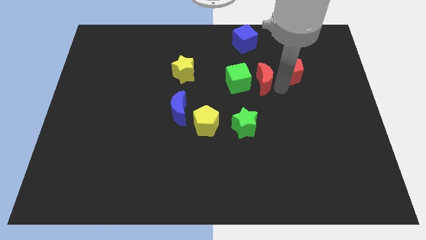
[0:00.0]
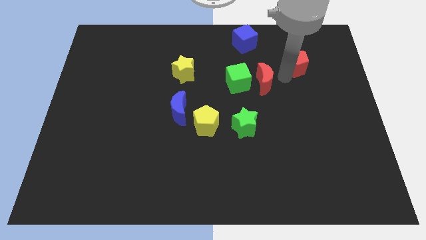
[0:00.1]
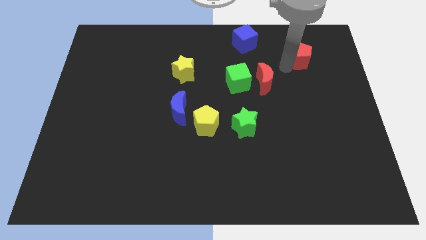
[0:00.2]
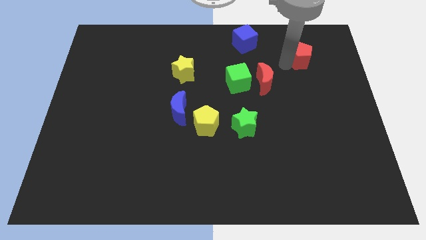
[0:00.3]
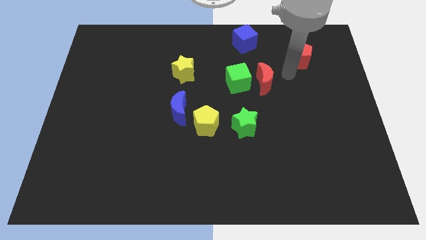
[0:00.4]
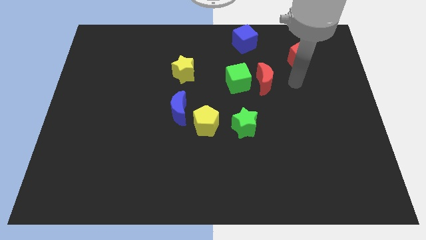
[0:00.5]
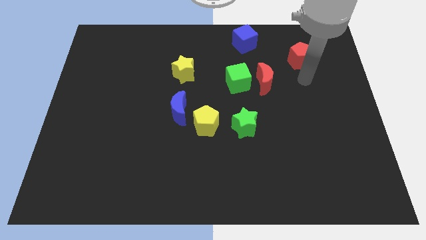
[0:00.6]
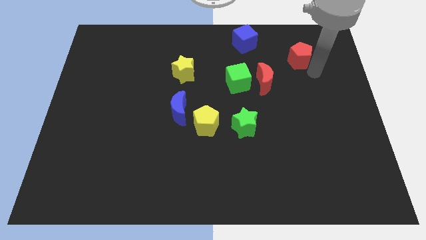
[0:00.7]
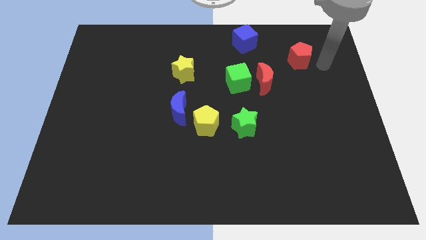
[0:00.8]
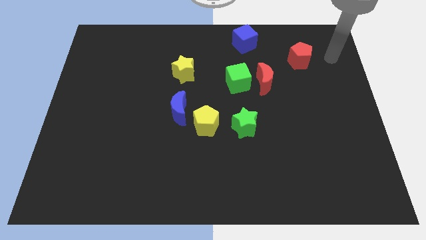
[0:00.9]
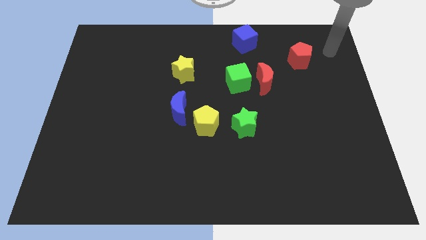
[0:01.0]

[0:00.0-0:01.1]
slide the red pentagon diagonally to the red crescent

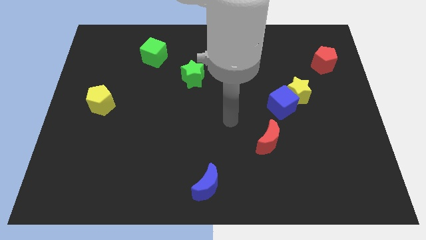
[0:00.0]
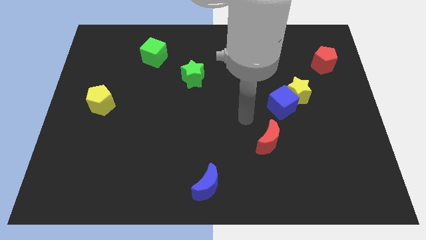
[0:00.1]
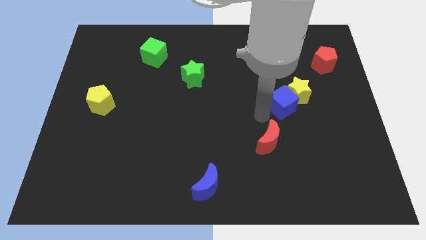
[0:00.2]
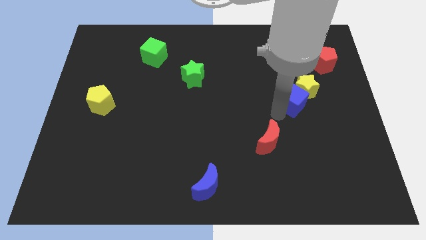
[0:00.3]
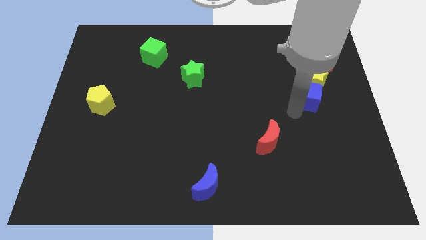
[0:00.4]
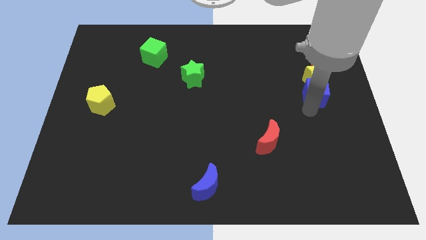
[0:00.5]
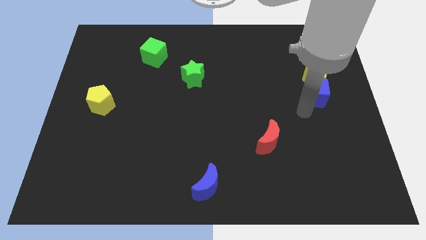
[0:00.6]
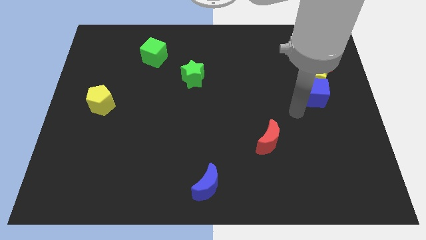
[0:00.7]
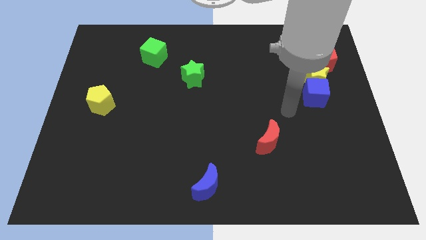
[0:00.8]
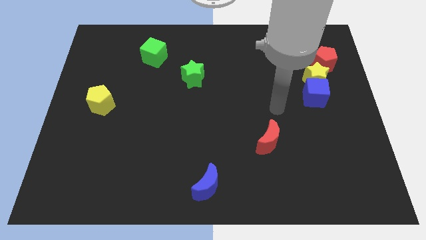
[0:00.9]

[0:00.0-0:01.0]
move the blue cube below the yellow star

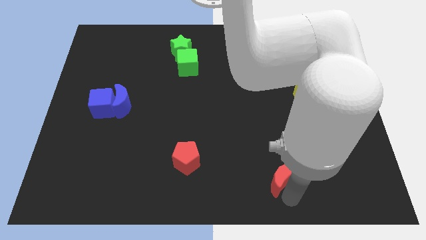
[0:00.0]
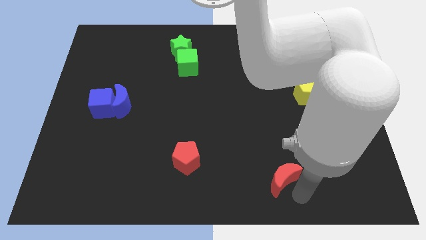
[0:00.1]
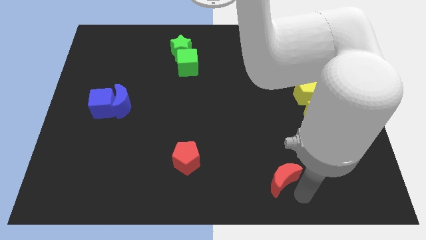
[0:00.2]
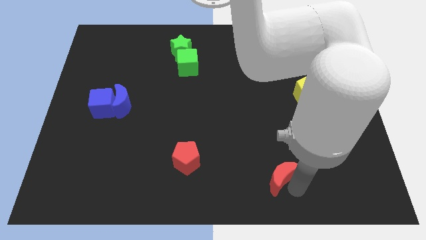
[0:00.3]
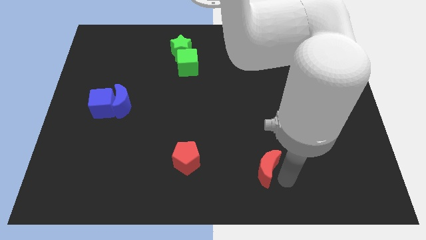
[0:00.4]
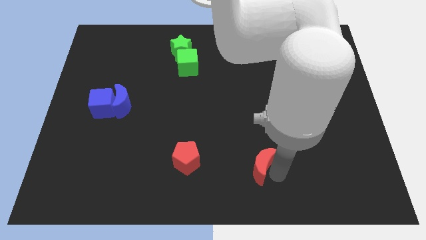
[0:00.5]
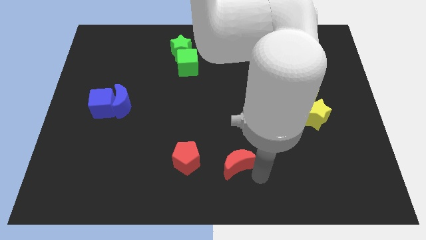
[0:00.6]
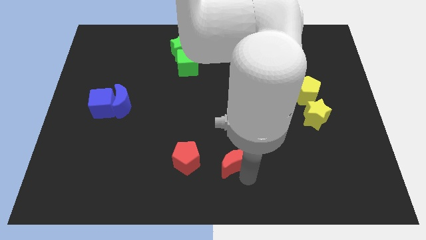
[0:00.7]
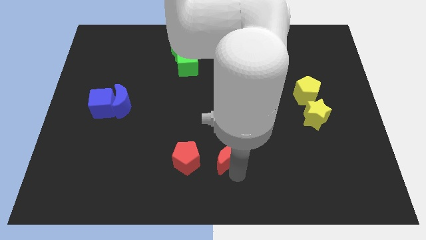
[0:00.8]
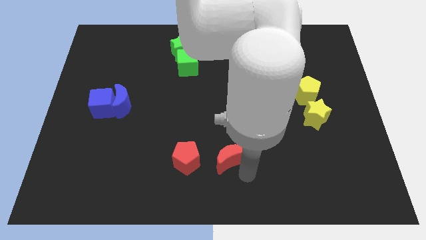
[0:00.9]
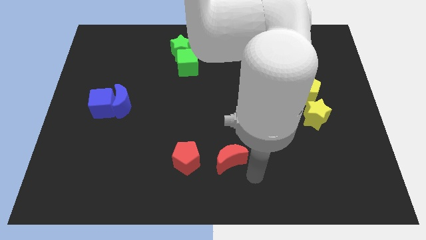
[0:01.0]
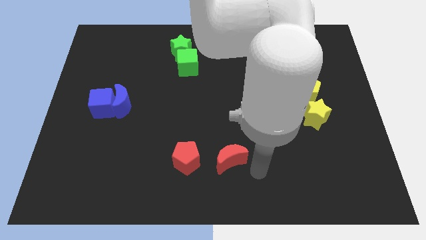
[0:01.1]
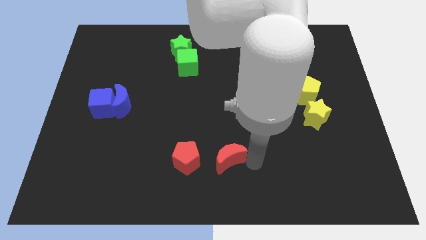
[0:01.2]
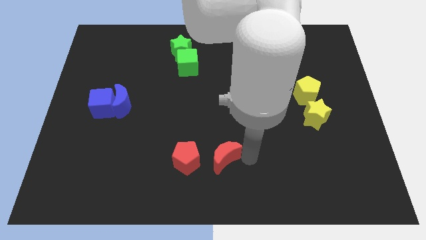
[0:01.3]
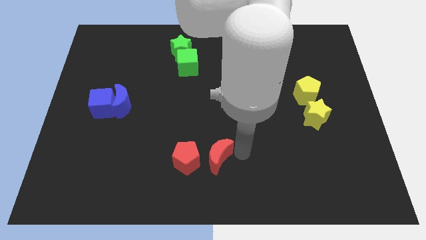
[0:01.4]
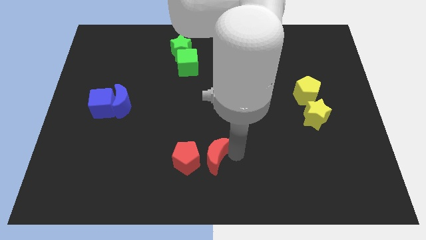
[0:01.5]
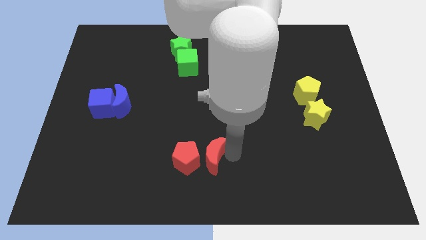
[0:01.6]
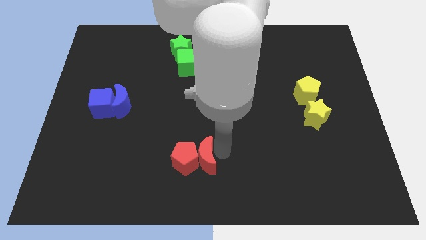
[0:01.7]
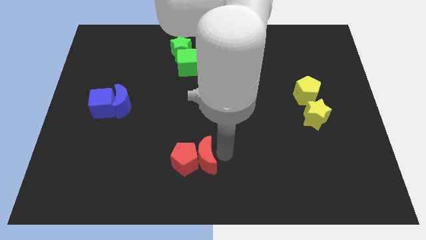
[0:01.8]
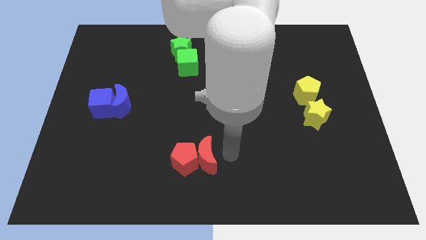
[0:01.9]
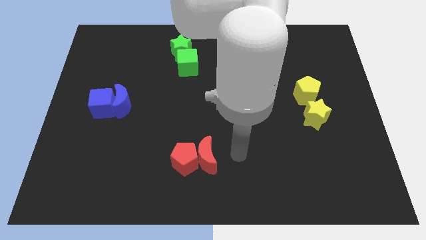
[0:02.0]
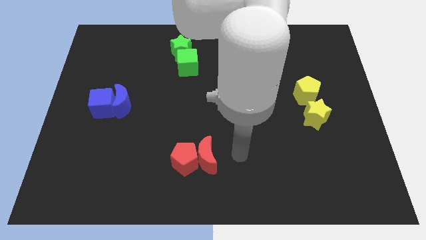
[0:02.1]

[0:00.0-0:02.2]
slide red crescent into red pentagon

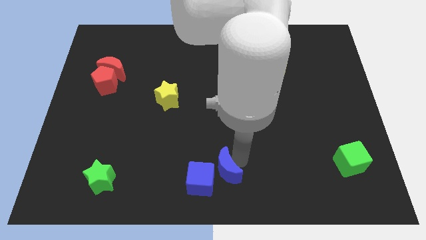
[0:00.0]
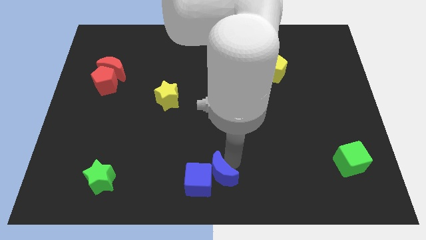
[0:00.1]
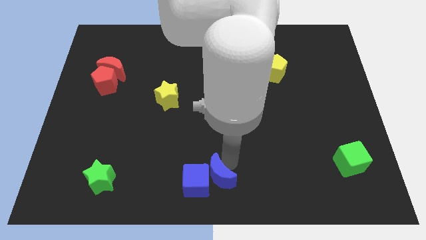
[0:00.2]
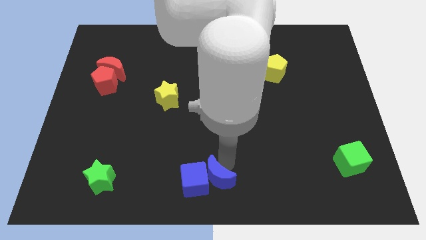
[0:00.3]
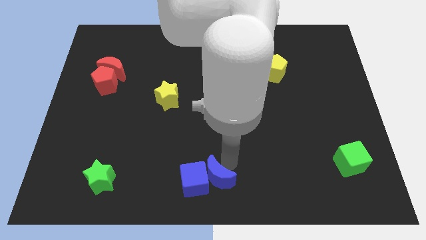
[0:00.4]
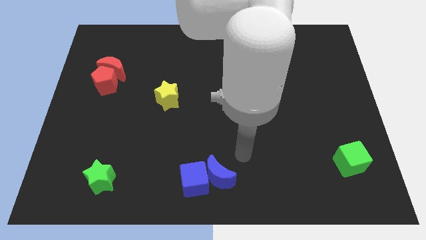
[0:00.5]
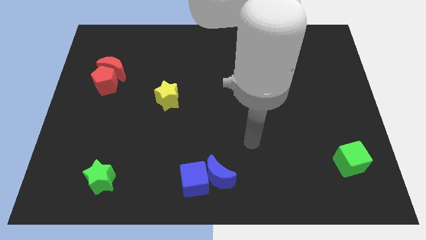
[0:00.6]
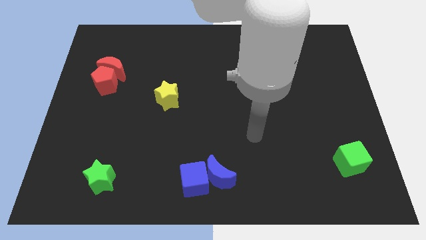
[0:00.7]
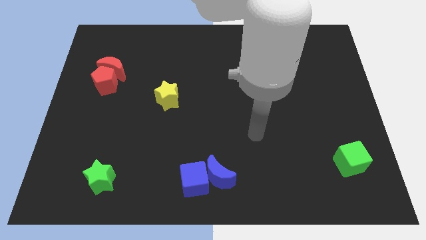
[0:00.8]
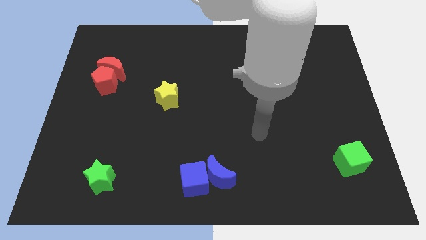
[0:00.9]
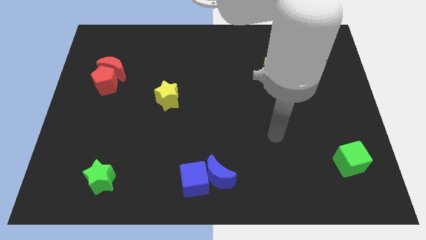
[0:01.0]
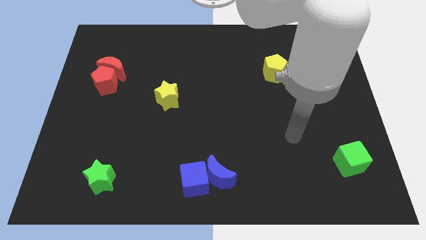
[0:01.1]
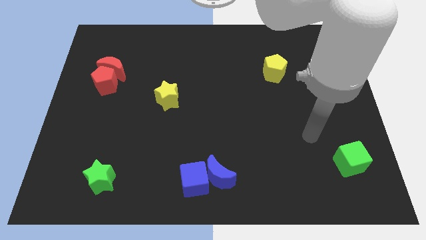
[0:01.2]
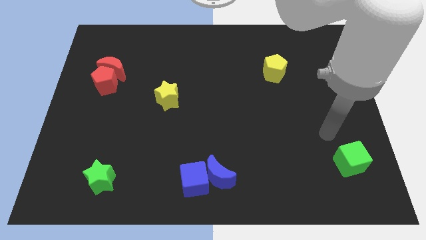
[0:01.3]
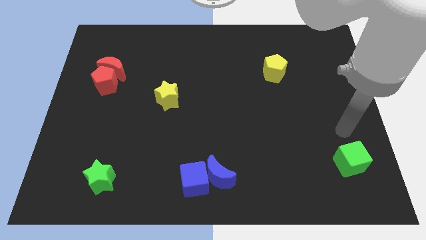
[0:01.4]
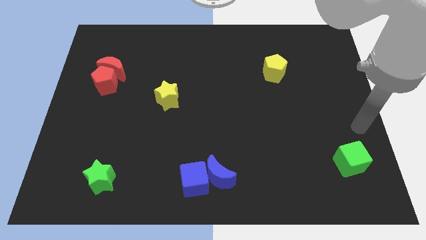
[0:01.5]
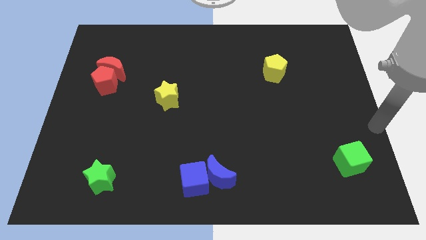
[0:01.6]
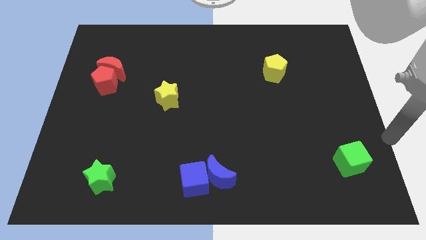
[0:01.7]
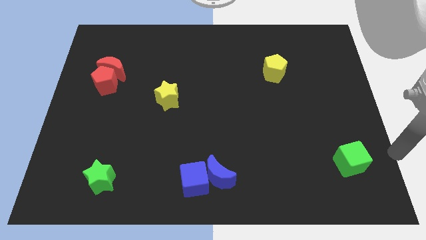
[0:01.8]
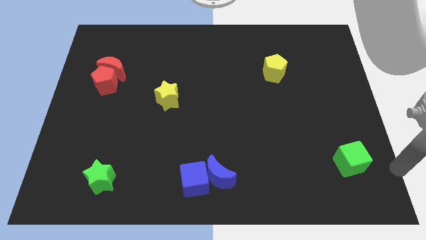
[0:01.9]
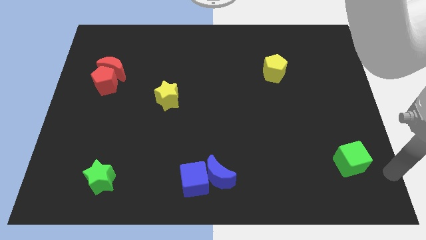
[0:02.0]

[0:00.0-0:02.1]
slightly move blue blocks to left

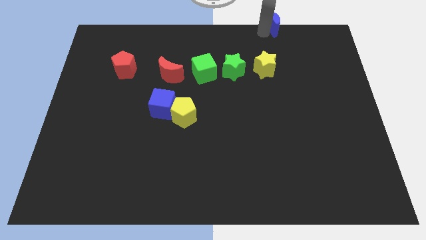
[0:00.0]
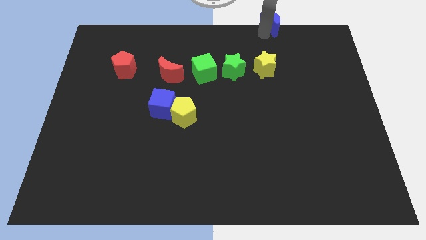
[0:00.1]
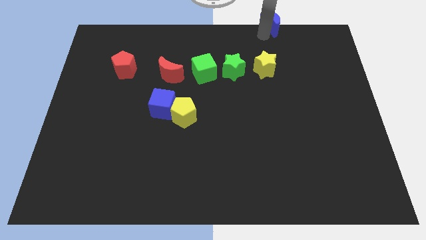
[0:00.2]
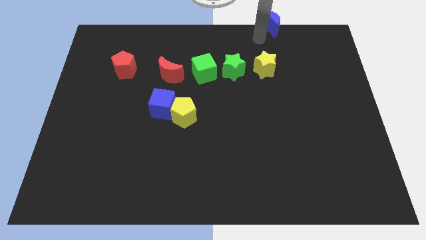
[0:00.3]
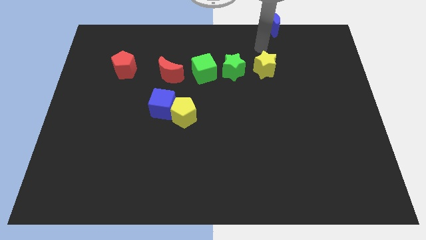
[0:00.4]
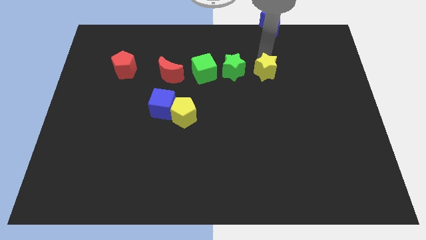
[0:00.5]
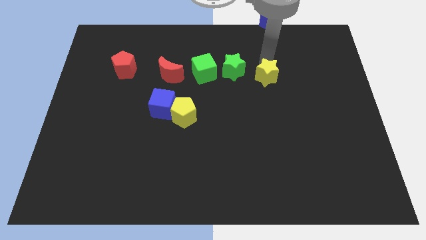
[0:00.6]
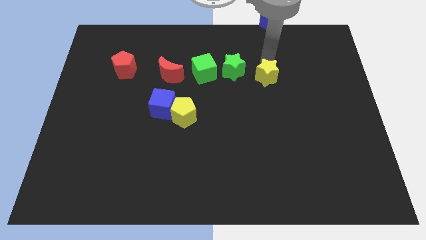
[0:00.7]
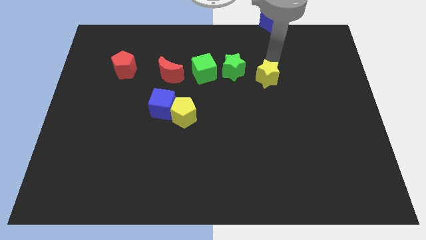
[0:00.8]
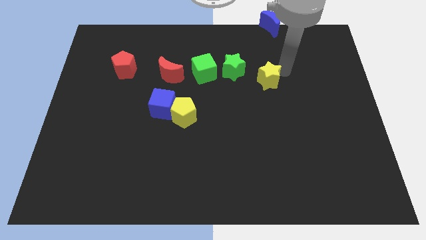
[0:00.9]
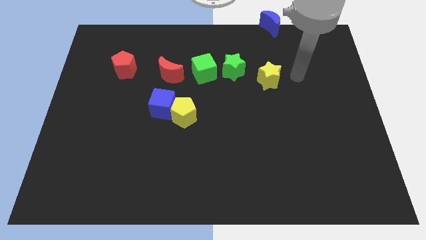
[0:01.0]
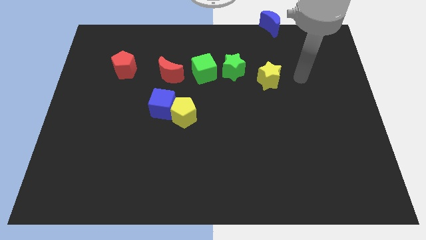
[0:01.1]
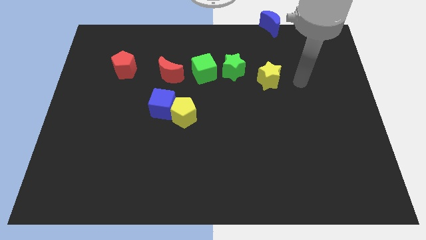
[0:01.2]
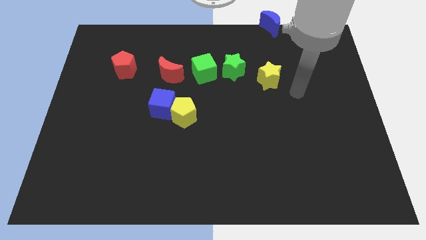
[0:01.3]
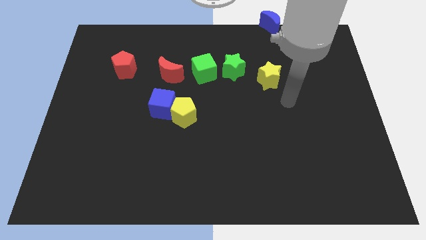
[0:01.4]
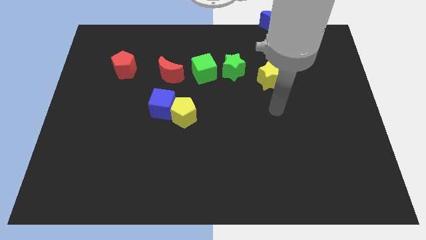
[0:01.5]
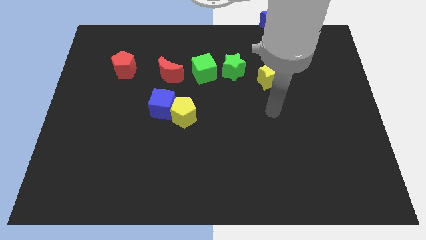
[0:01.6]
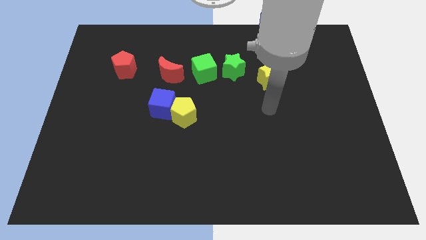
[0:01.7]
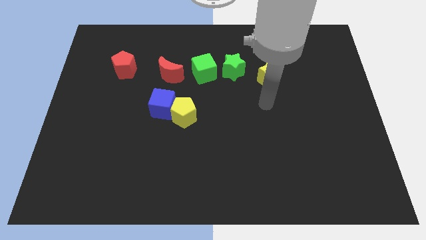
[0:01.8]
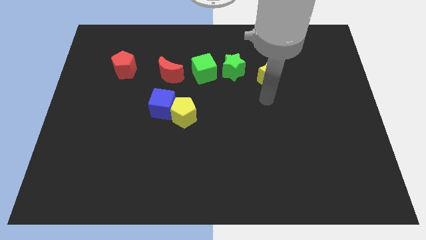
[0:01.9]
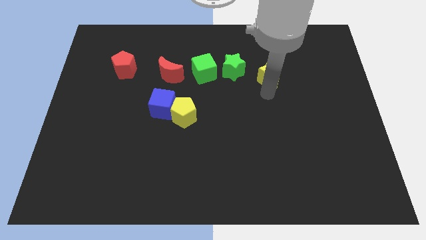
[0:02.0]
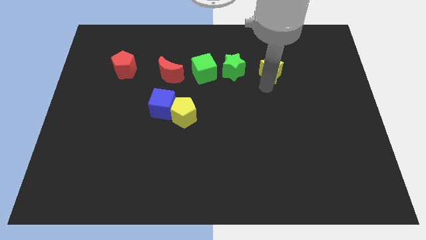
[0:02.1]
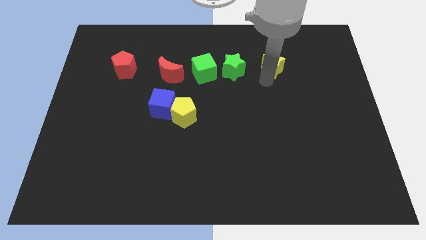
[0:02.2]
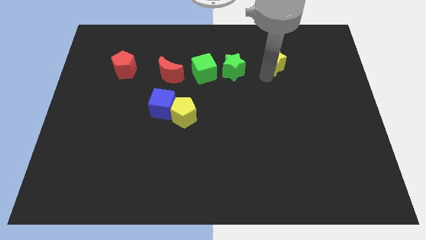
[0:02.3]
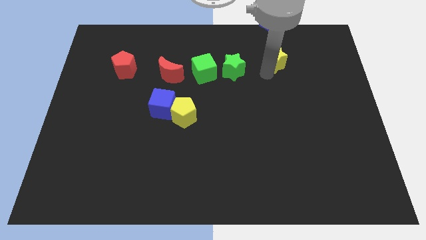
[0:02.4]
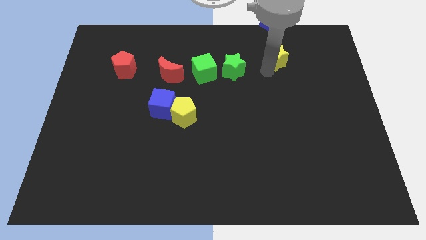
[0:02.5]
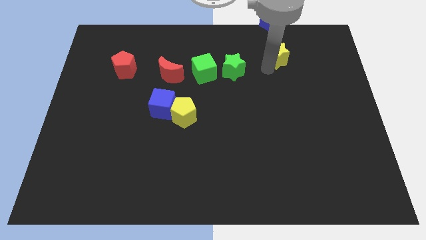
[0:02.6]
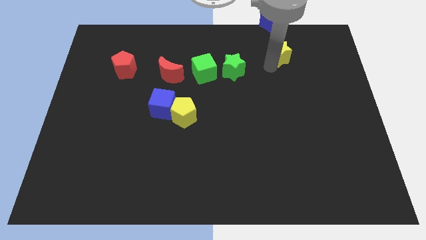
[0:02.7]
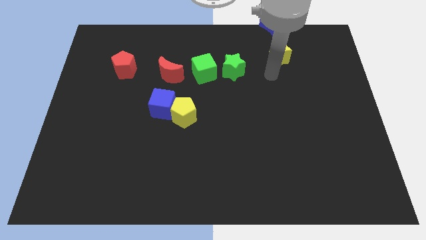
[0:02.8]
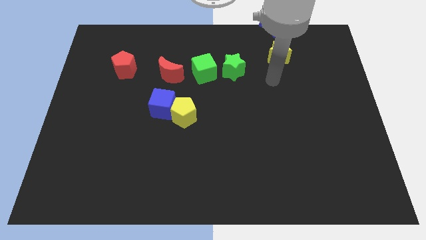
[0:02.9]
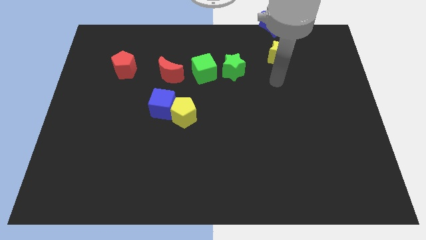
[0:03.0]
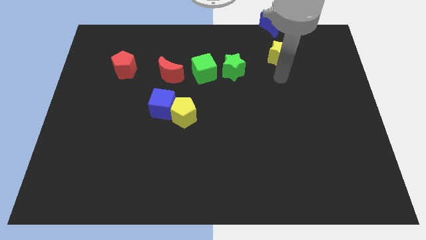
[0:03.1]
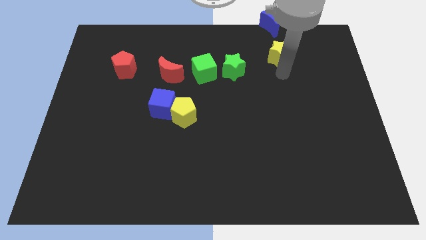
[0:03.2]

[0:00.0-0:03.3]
move the yellow star towards the blue semicircle
